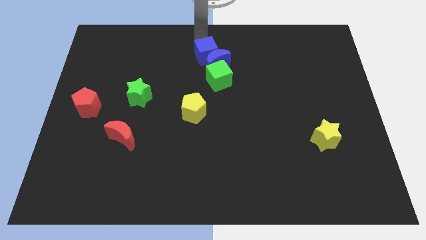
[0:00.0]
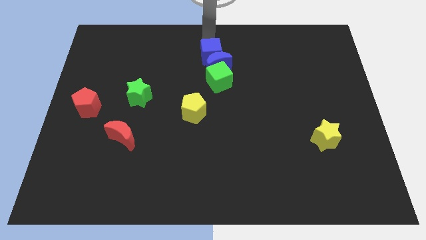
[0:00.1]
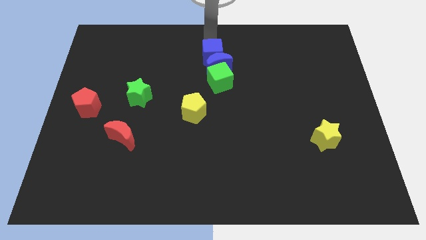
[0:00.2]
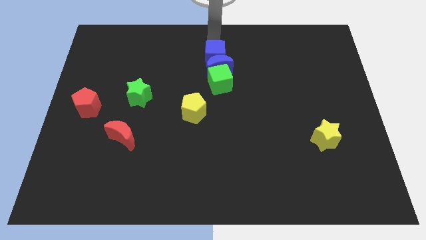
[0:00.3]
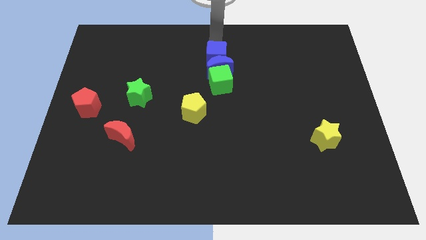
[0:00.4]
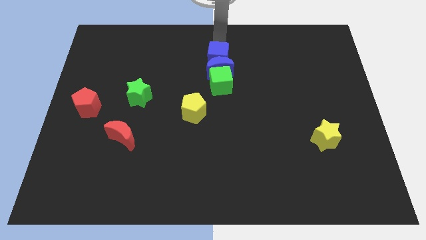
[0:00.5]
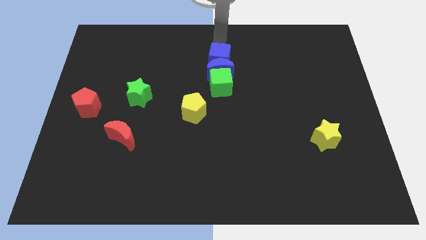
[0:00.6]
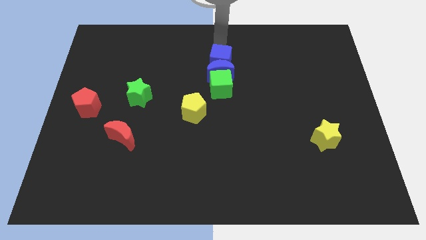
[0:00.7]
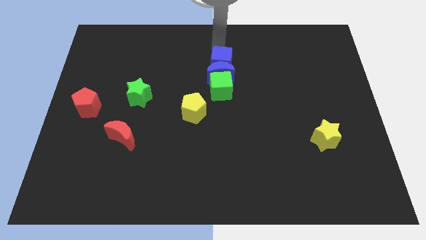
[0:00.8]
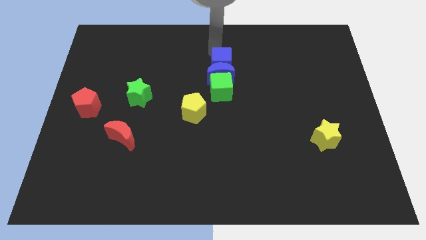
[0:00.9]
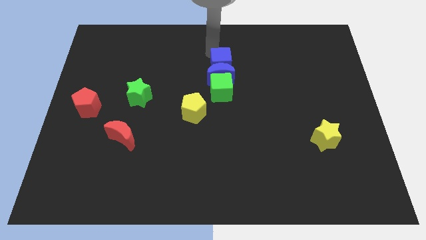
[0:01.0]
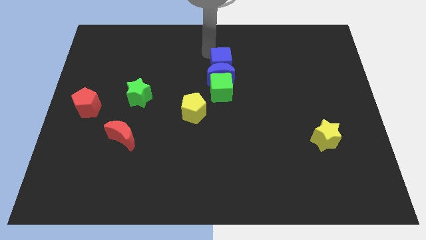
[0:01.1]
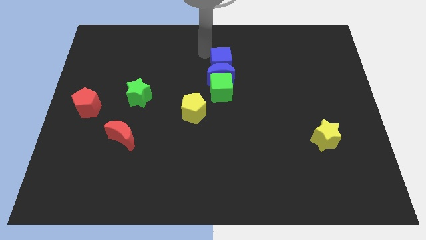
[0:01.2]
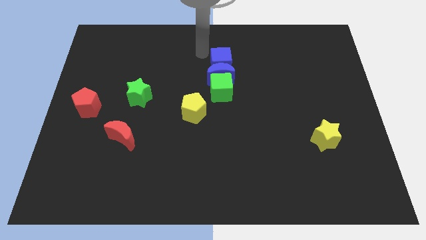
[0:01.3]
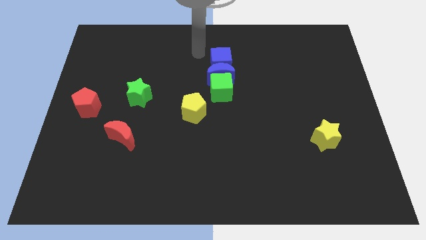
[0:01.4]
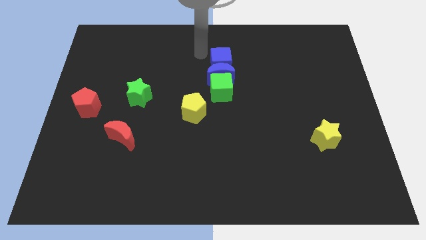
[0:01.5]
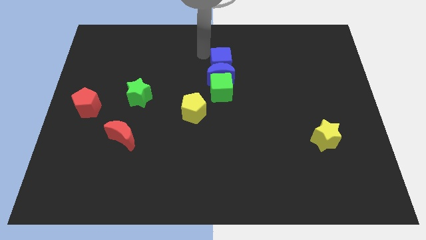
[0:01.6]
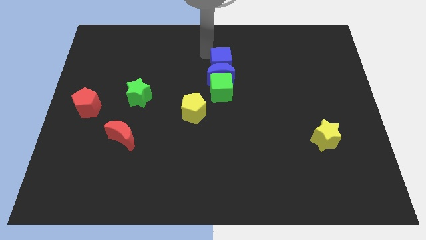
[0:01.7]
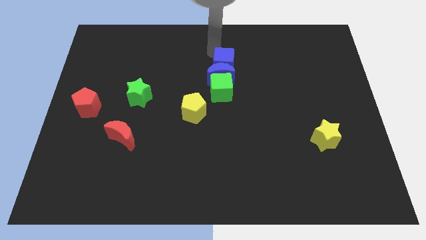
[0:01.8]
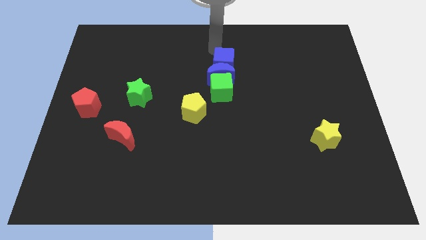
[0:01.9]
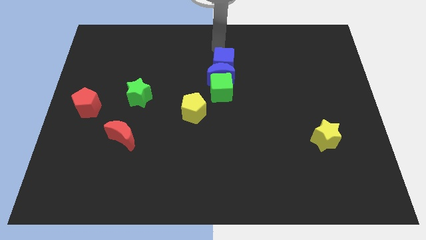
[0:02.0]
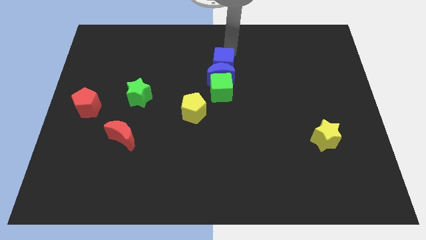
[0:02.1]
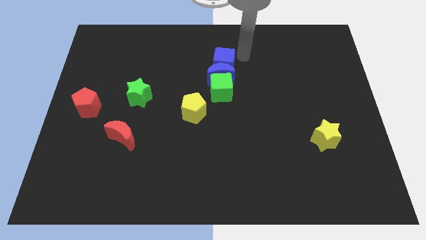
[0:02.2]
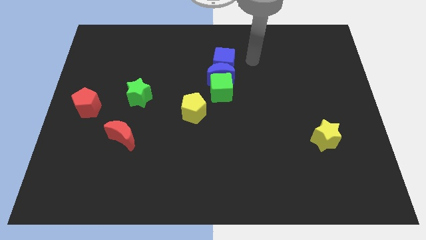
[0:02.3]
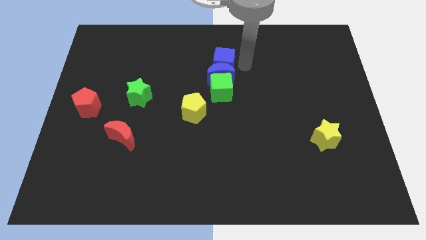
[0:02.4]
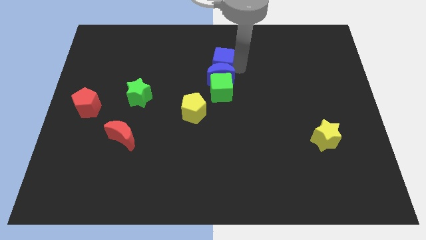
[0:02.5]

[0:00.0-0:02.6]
move the group of blocks slightly to the bottom

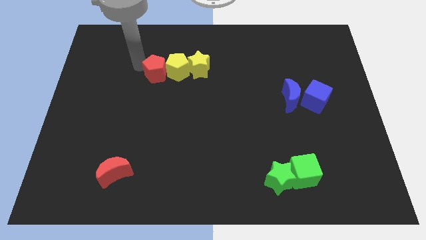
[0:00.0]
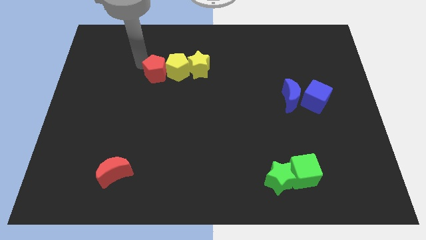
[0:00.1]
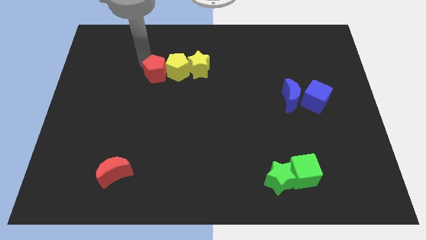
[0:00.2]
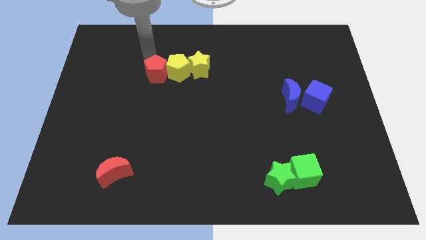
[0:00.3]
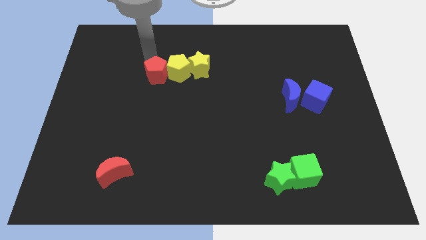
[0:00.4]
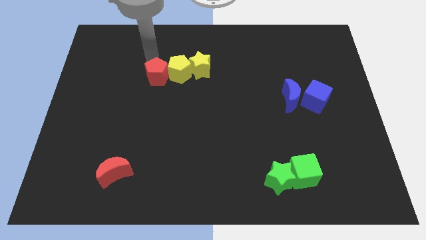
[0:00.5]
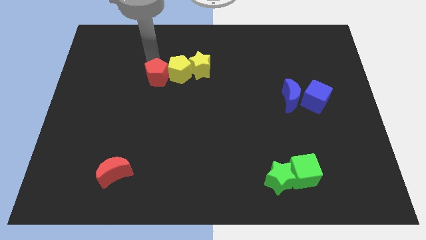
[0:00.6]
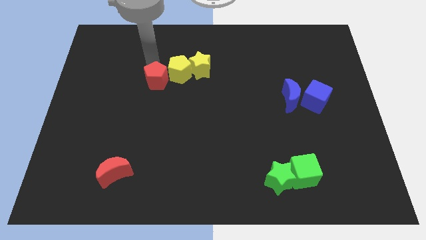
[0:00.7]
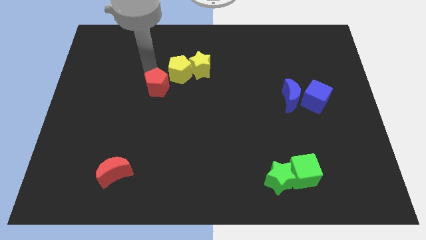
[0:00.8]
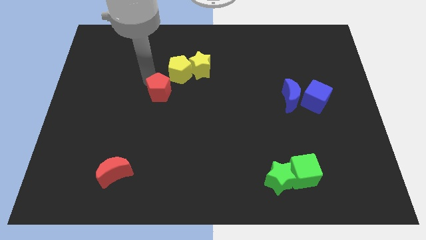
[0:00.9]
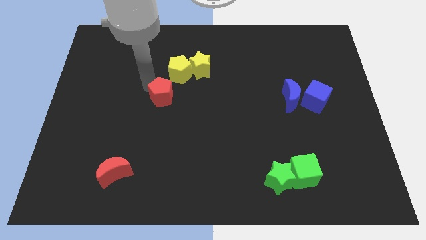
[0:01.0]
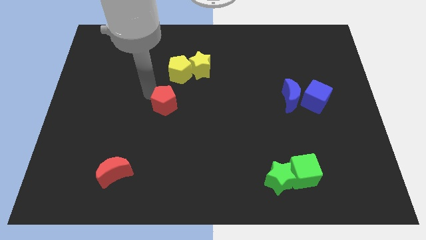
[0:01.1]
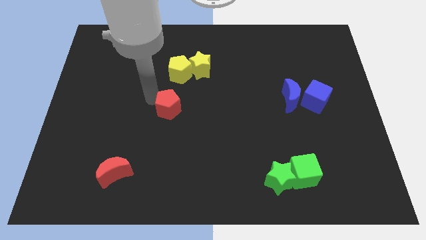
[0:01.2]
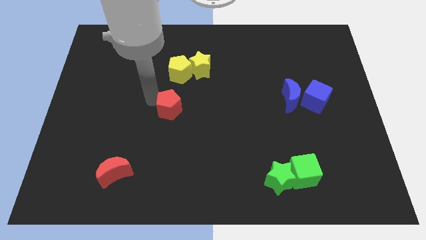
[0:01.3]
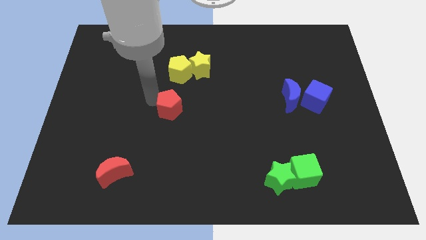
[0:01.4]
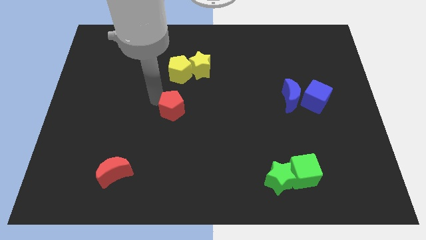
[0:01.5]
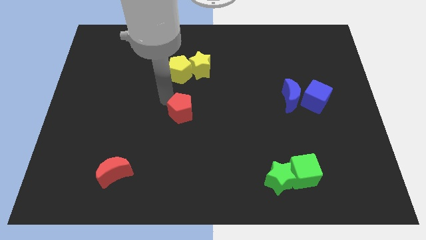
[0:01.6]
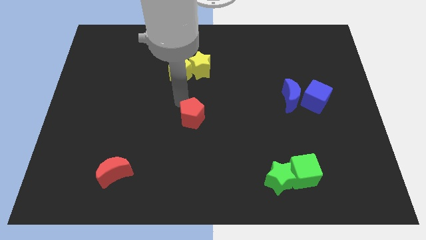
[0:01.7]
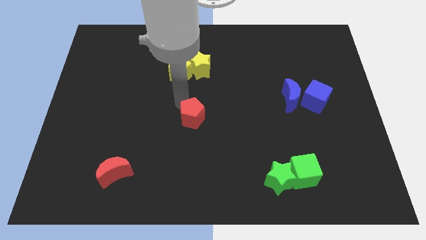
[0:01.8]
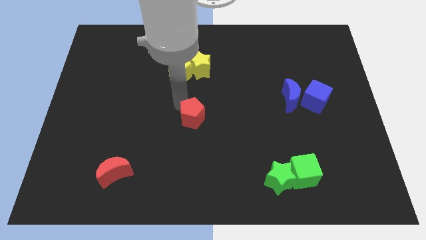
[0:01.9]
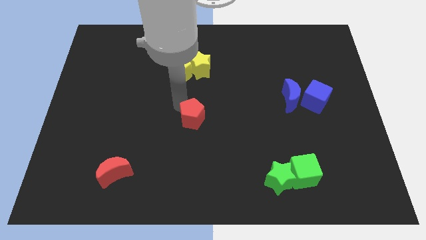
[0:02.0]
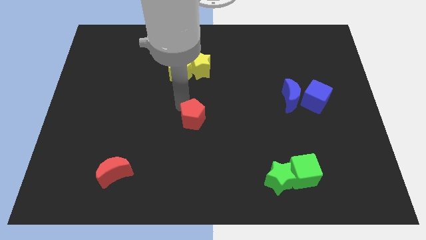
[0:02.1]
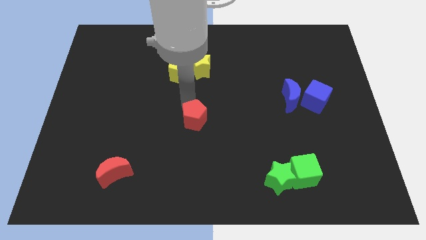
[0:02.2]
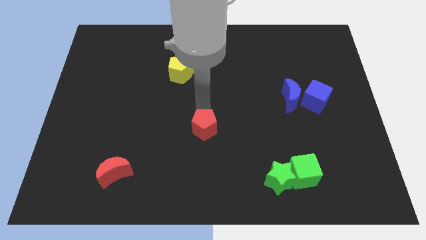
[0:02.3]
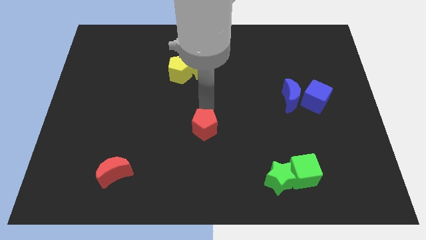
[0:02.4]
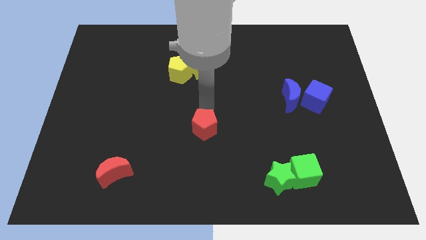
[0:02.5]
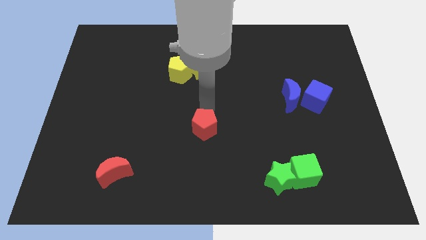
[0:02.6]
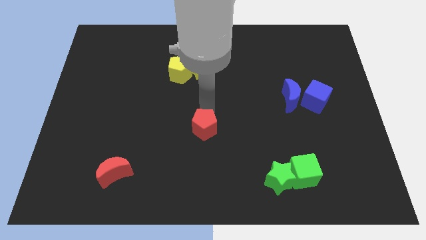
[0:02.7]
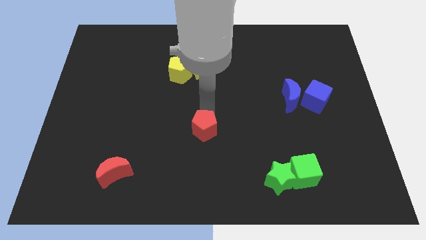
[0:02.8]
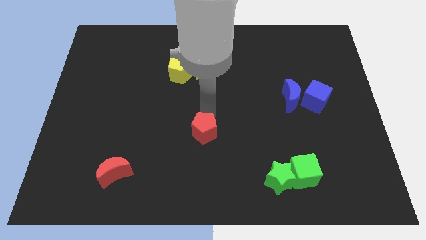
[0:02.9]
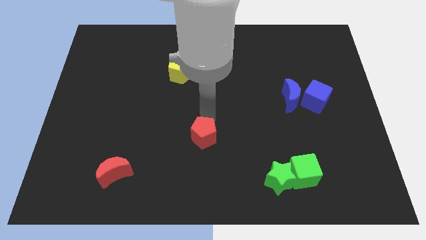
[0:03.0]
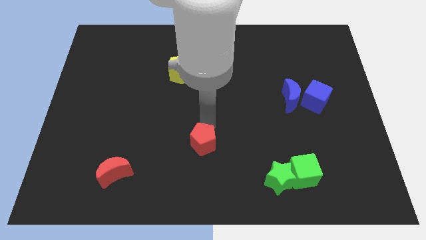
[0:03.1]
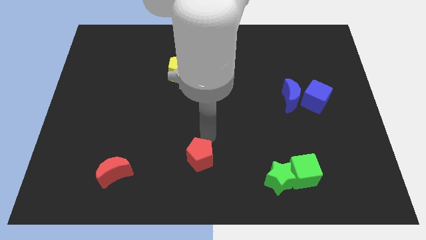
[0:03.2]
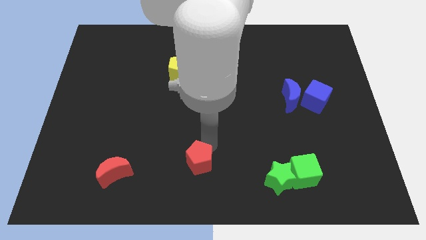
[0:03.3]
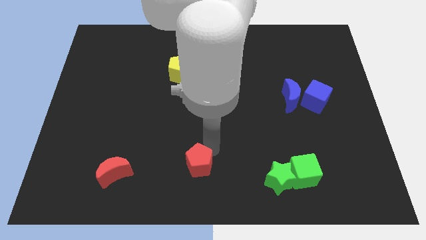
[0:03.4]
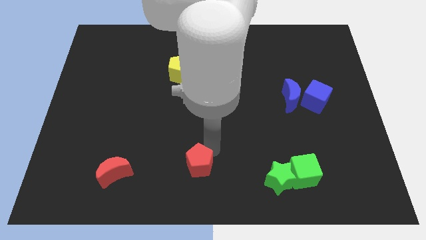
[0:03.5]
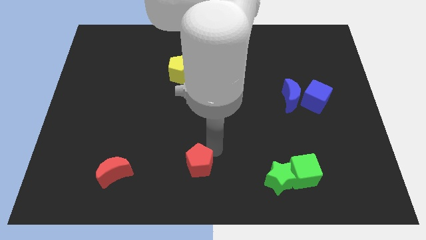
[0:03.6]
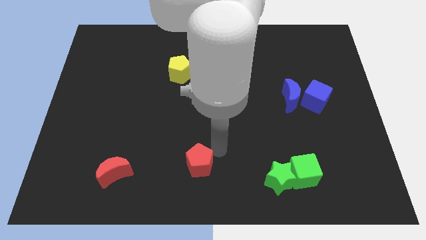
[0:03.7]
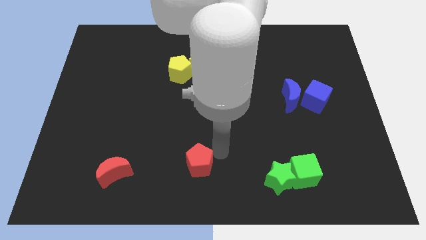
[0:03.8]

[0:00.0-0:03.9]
place red pentagon parallel to red moon

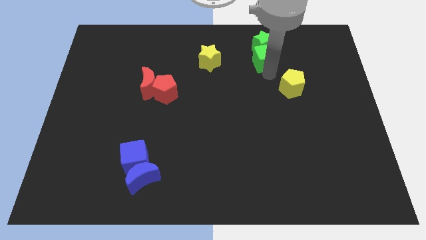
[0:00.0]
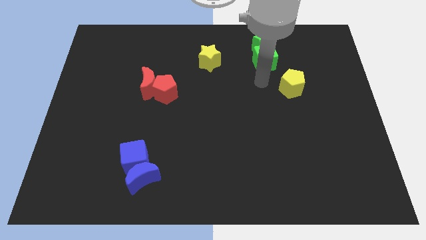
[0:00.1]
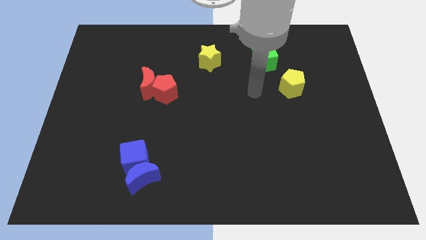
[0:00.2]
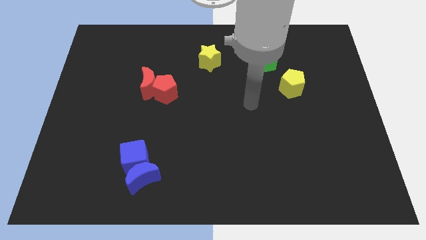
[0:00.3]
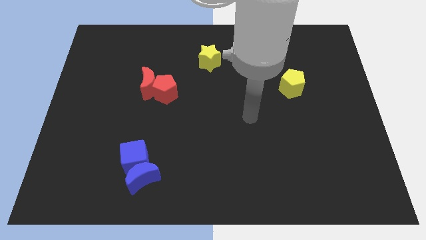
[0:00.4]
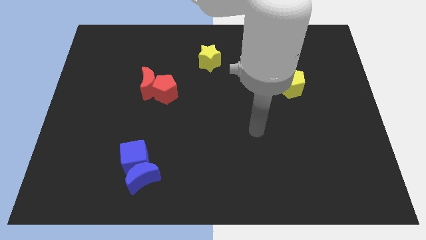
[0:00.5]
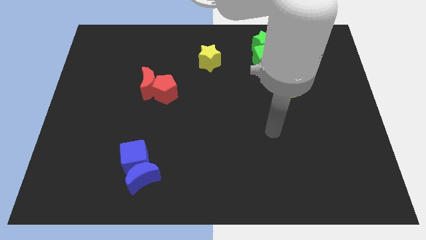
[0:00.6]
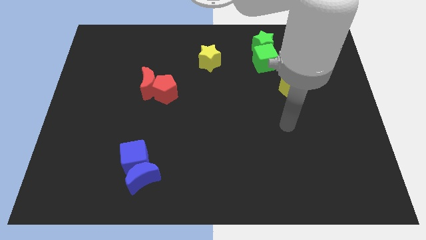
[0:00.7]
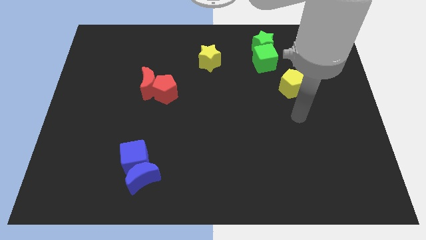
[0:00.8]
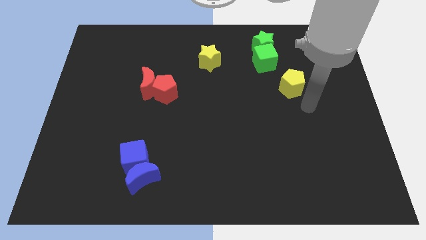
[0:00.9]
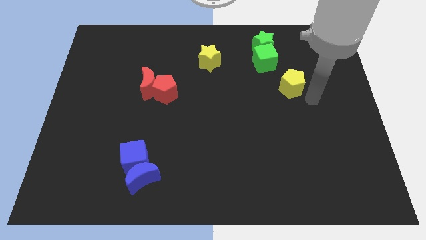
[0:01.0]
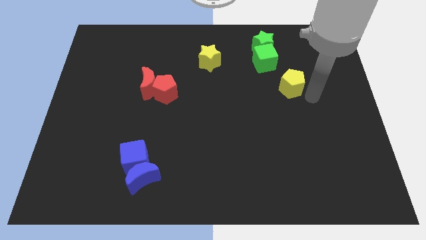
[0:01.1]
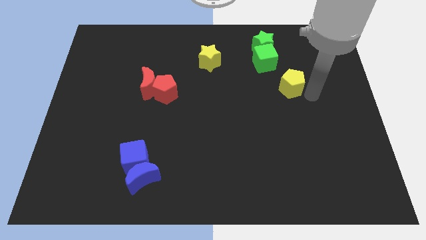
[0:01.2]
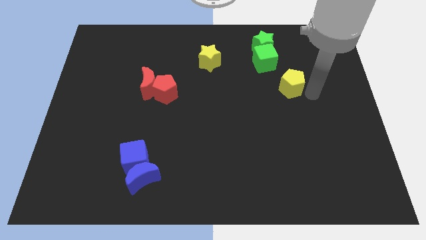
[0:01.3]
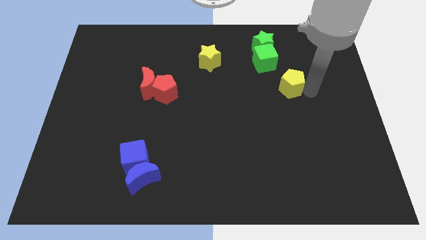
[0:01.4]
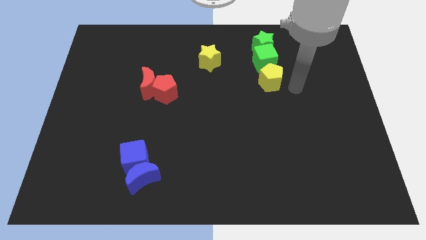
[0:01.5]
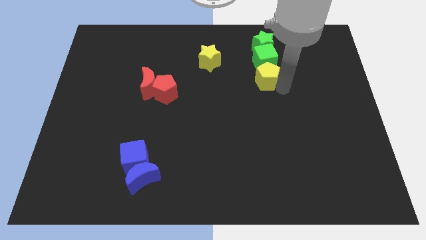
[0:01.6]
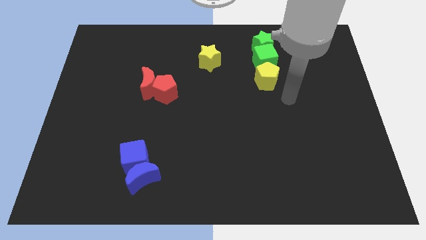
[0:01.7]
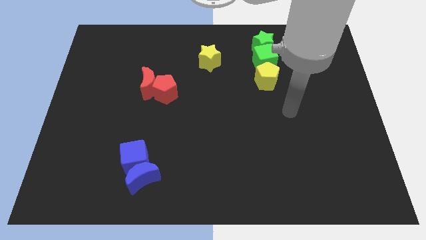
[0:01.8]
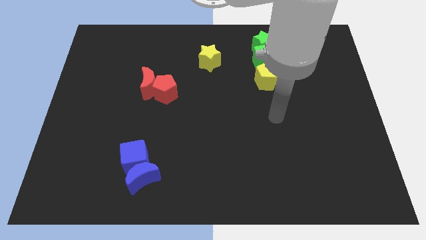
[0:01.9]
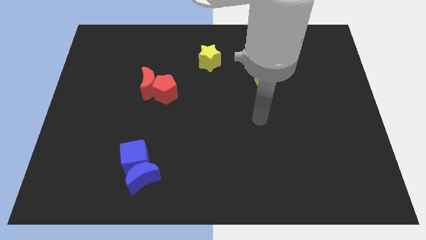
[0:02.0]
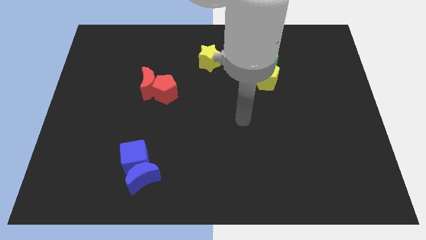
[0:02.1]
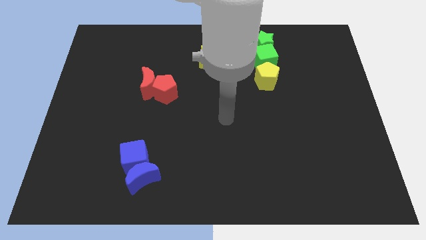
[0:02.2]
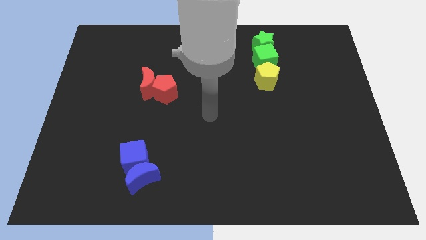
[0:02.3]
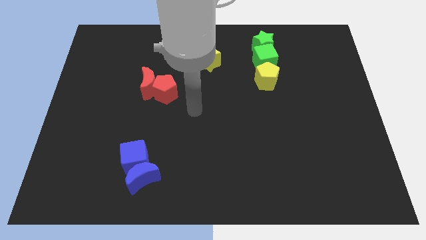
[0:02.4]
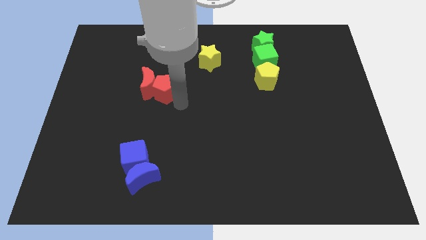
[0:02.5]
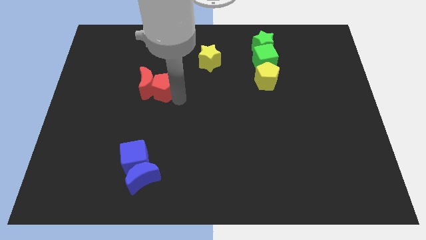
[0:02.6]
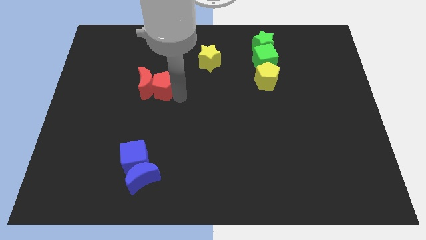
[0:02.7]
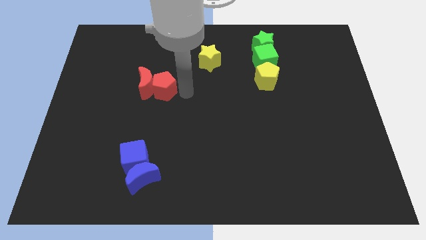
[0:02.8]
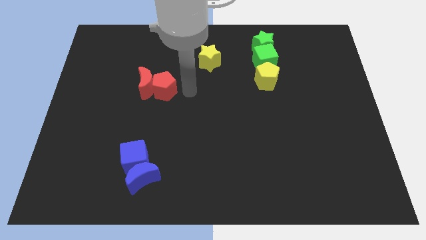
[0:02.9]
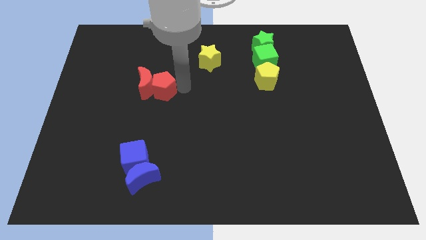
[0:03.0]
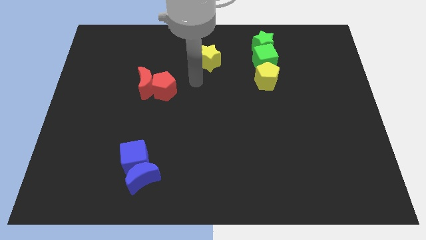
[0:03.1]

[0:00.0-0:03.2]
move the yellow pentagon below the green cube
